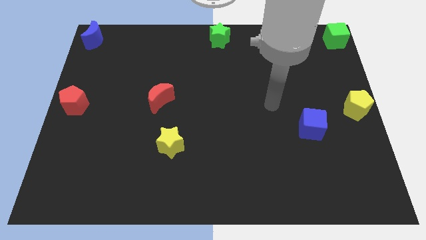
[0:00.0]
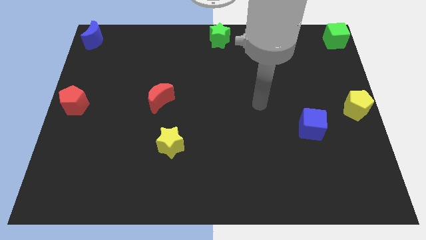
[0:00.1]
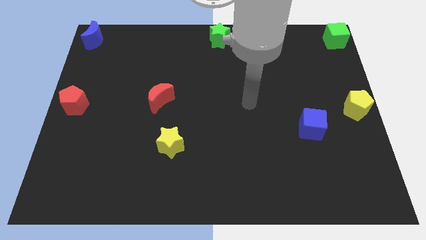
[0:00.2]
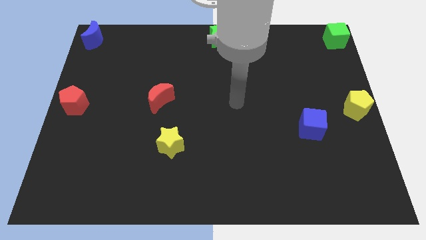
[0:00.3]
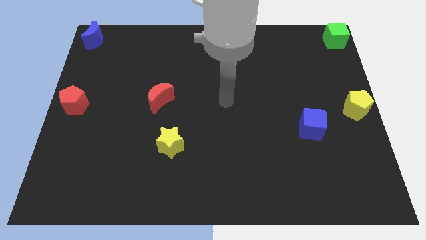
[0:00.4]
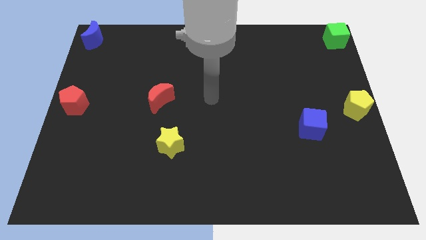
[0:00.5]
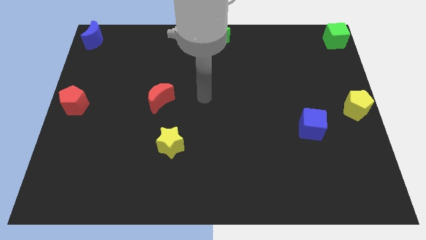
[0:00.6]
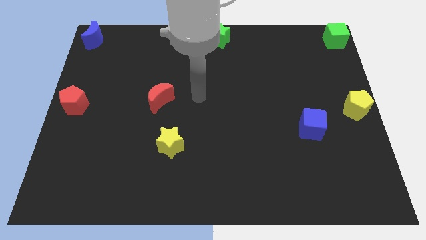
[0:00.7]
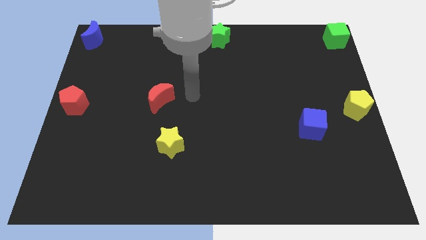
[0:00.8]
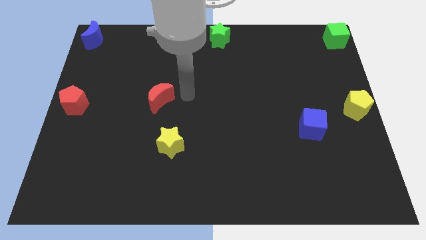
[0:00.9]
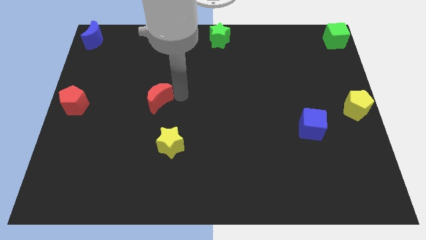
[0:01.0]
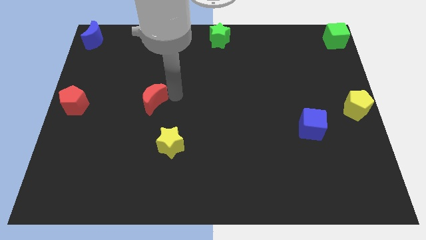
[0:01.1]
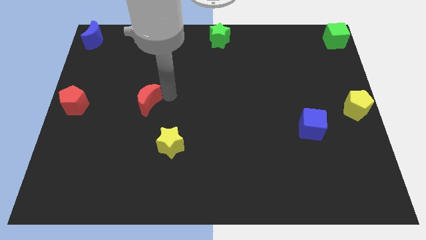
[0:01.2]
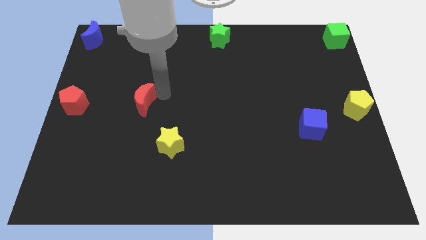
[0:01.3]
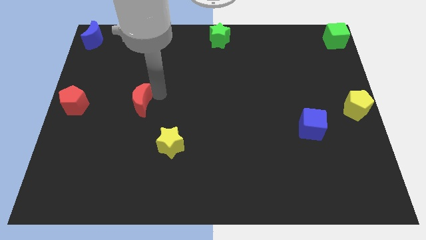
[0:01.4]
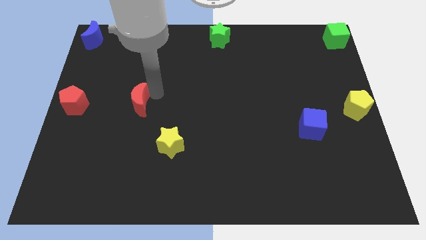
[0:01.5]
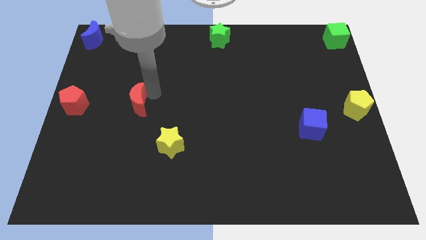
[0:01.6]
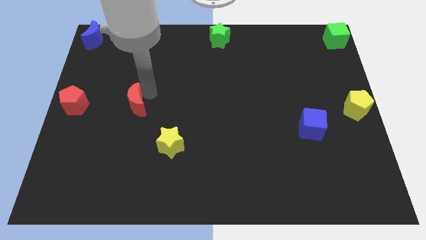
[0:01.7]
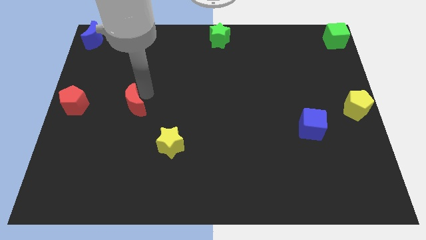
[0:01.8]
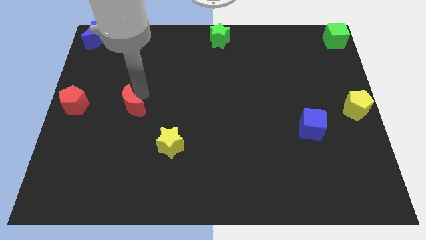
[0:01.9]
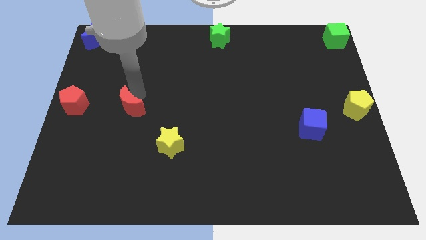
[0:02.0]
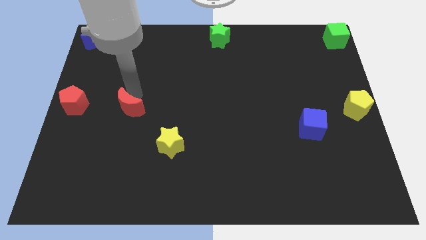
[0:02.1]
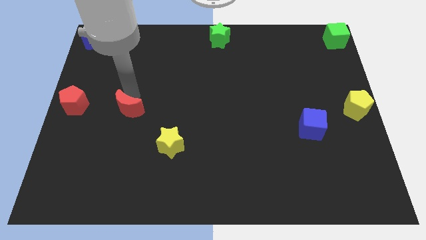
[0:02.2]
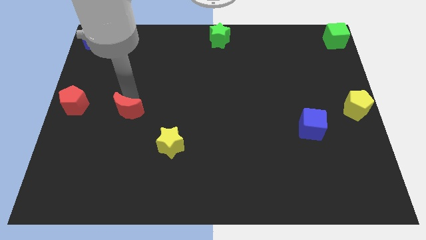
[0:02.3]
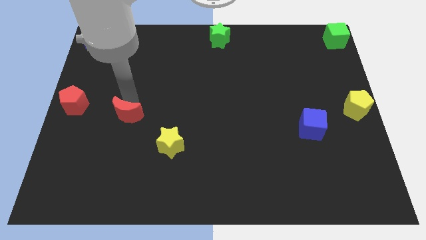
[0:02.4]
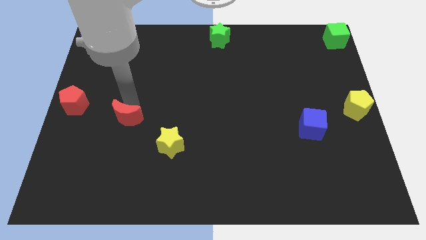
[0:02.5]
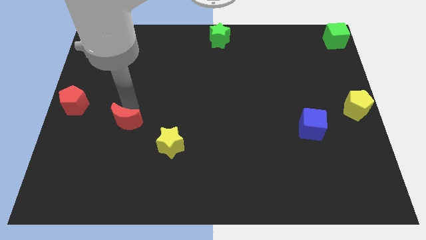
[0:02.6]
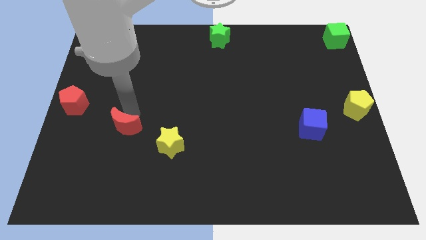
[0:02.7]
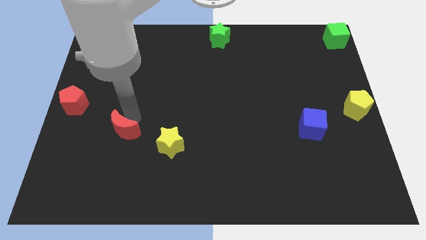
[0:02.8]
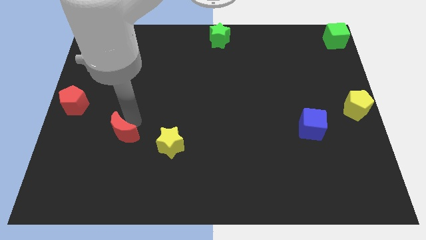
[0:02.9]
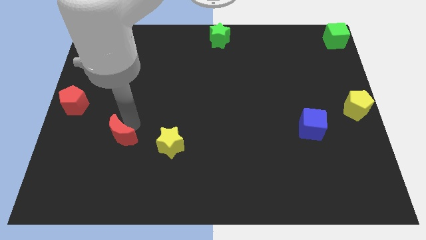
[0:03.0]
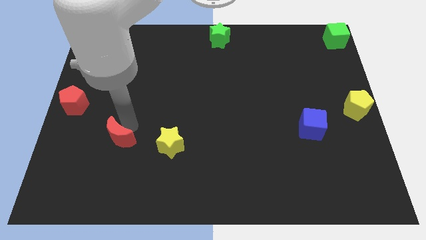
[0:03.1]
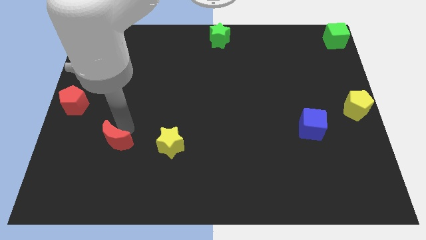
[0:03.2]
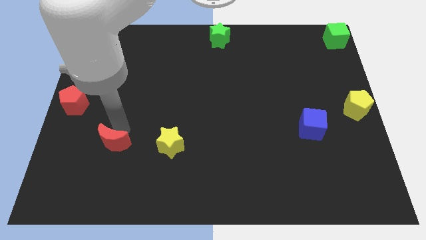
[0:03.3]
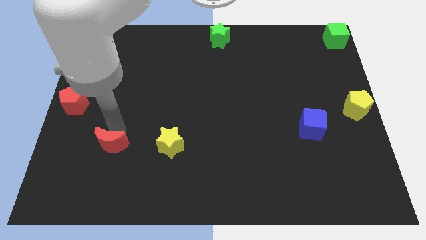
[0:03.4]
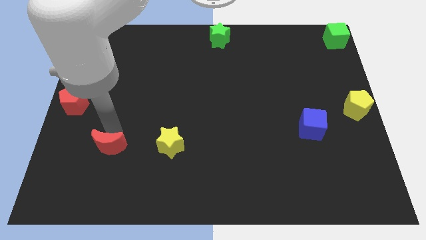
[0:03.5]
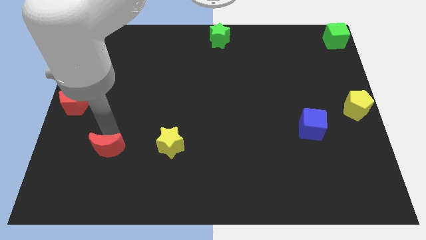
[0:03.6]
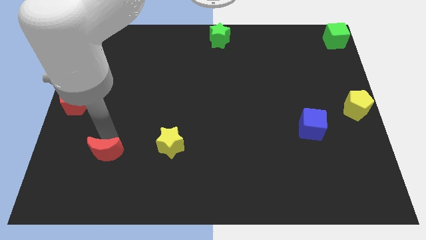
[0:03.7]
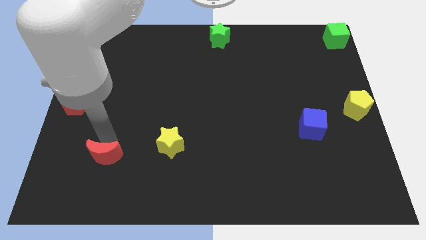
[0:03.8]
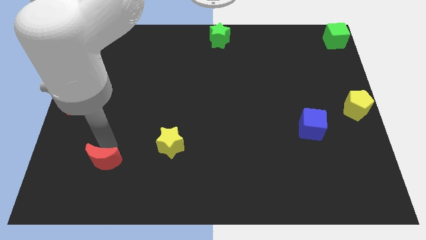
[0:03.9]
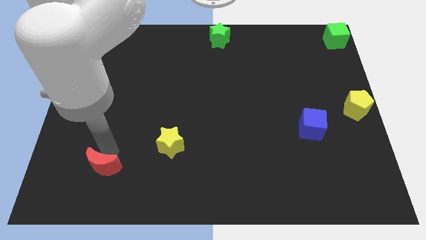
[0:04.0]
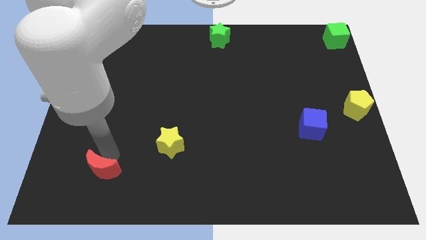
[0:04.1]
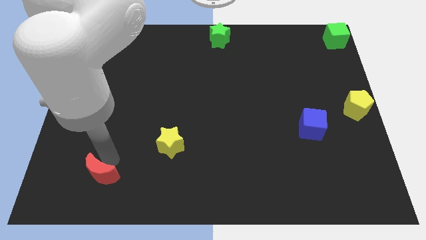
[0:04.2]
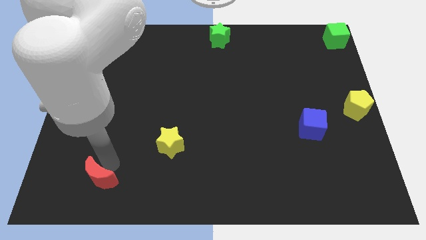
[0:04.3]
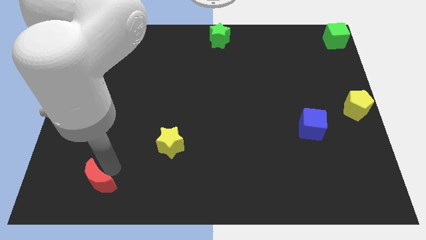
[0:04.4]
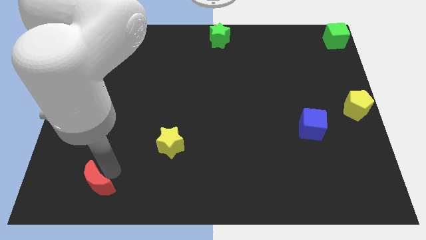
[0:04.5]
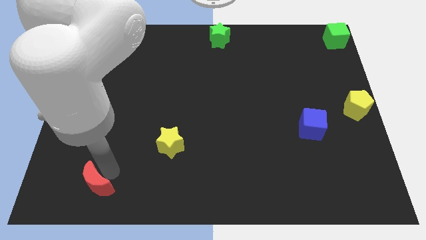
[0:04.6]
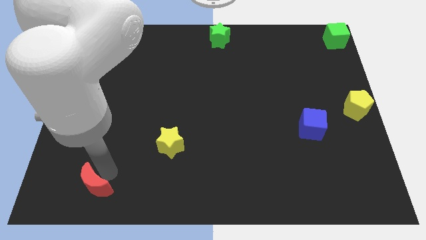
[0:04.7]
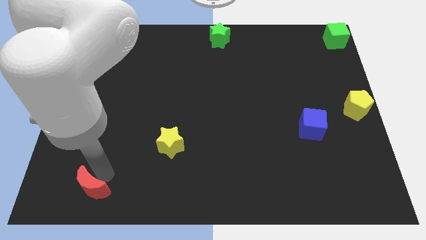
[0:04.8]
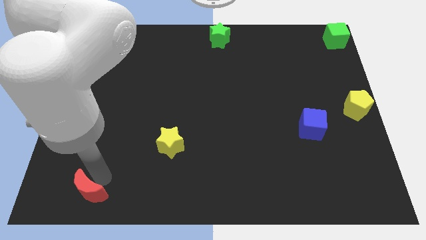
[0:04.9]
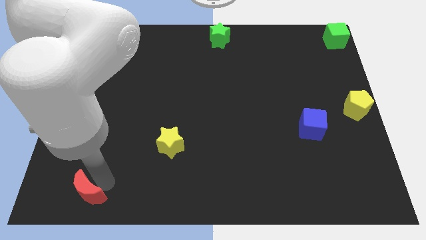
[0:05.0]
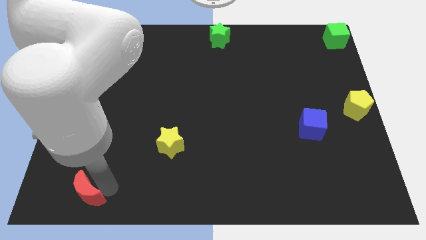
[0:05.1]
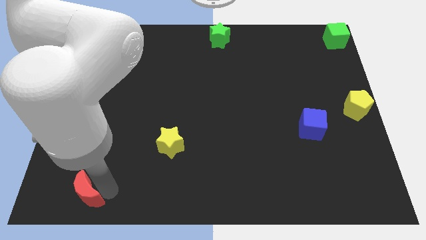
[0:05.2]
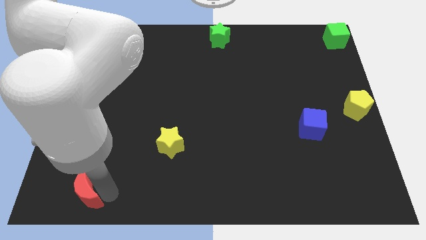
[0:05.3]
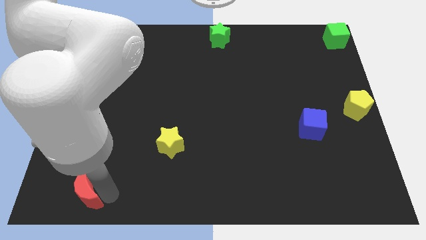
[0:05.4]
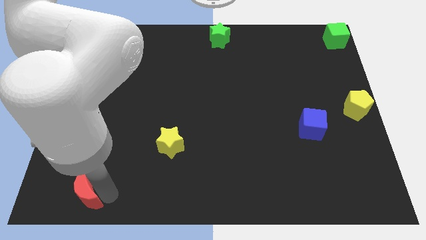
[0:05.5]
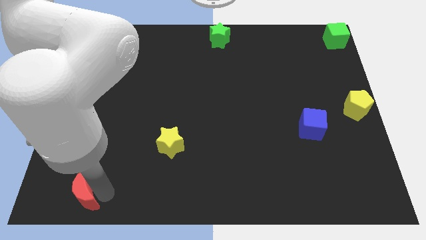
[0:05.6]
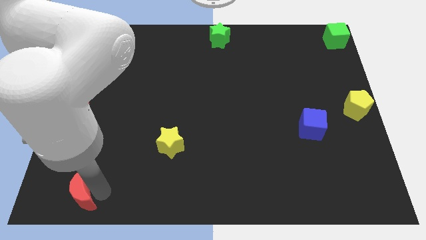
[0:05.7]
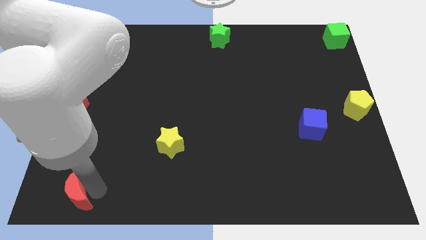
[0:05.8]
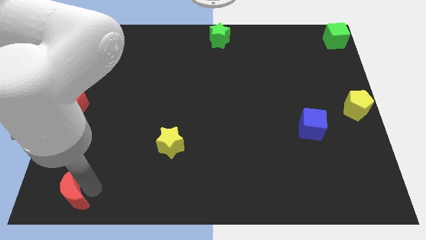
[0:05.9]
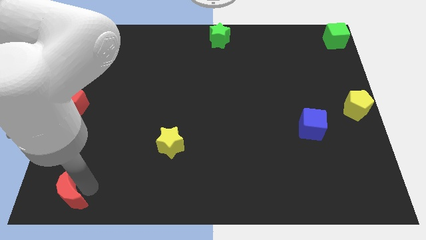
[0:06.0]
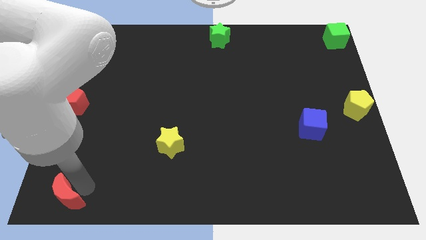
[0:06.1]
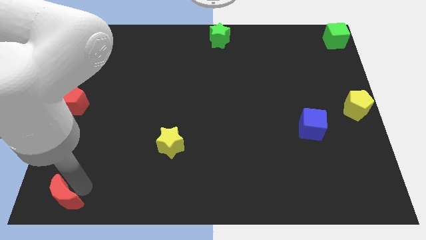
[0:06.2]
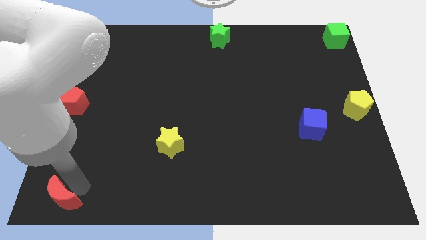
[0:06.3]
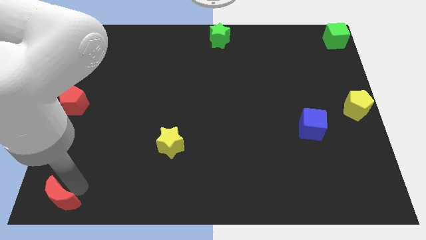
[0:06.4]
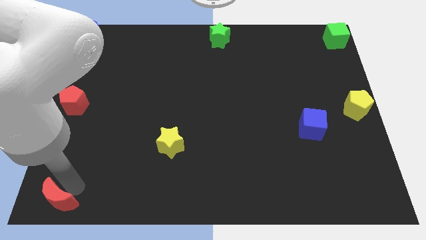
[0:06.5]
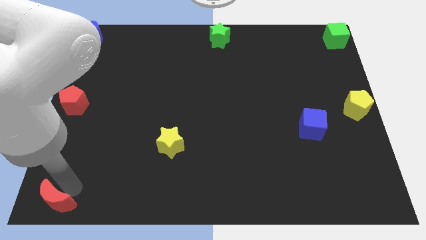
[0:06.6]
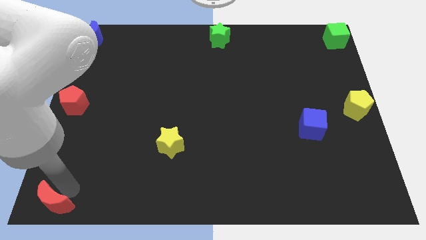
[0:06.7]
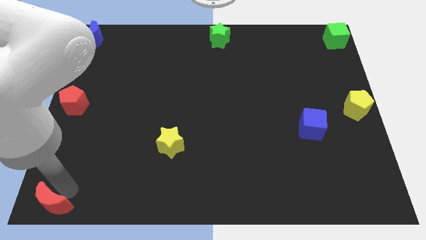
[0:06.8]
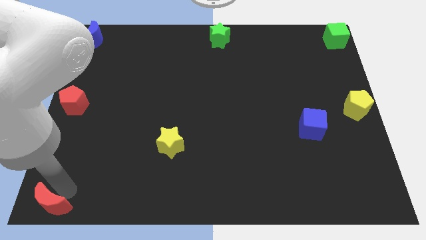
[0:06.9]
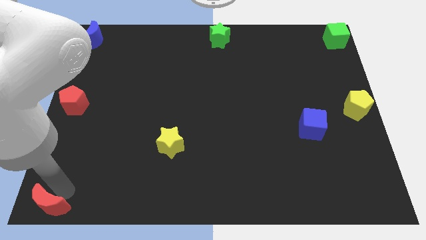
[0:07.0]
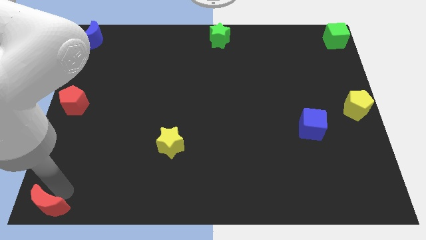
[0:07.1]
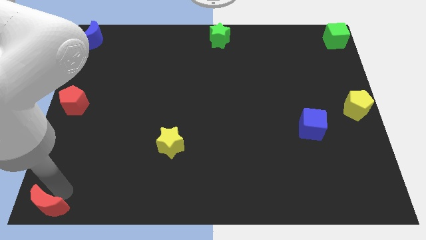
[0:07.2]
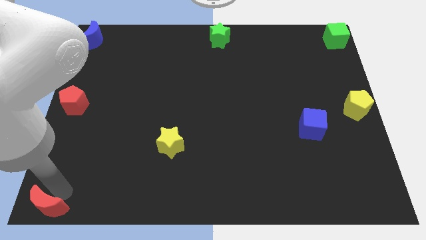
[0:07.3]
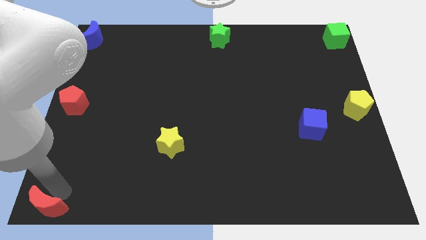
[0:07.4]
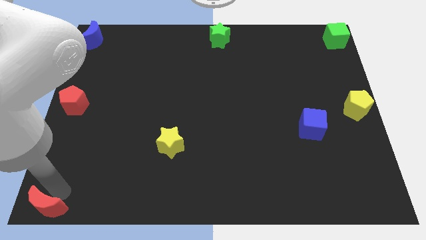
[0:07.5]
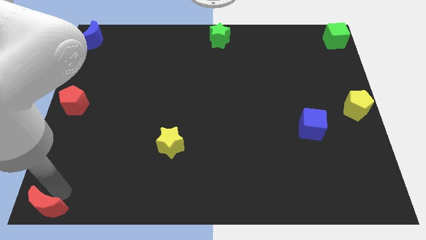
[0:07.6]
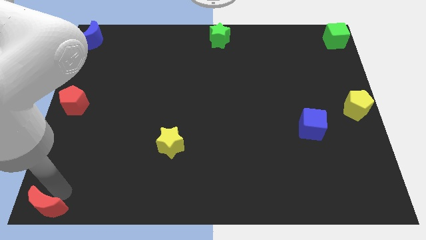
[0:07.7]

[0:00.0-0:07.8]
push red moon to the bottom left

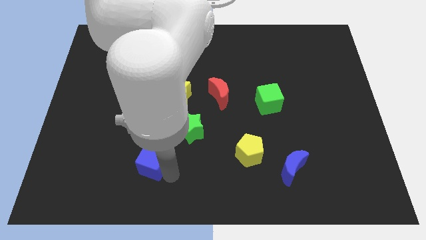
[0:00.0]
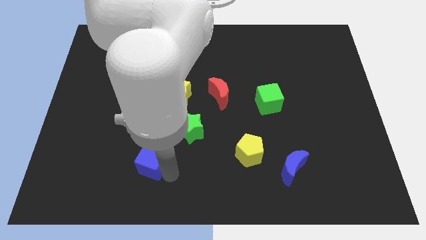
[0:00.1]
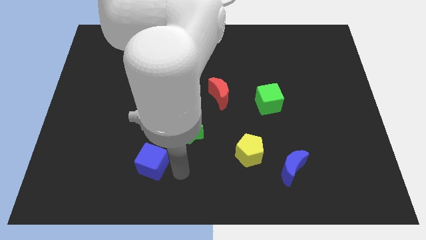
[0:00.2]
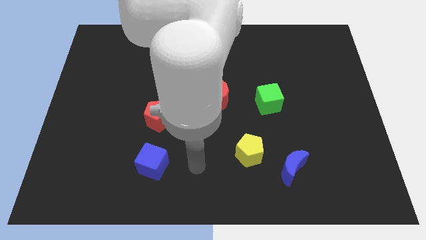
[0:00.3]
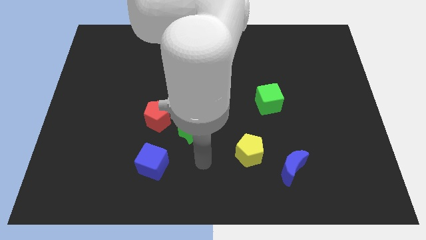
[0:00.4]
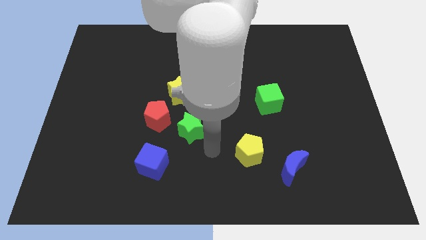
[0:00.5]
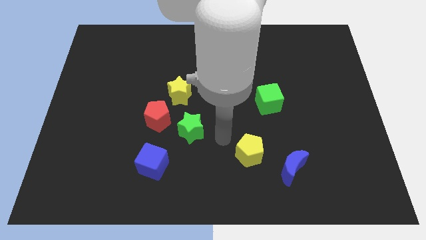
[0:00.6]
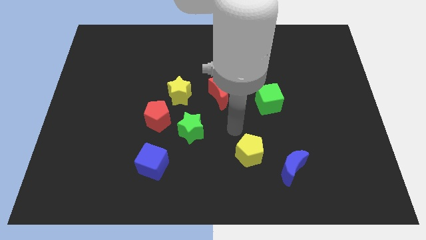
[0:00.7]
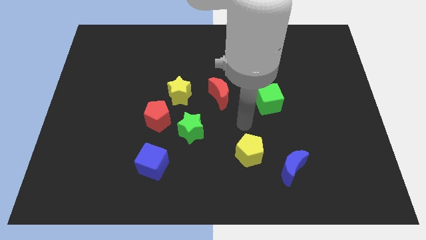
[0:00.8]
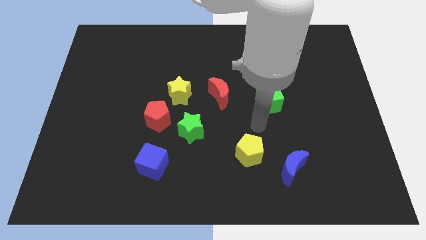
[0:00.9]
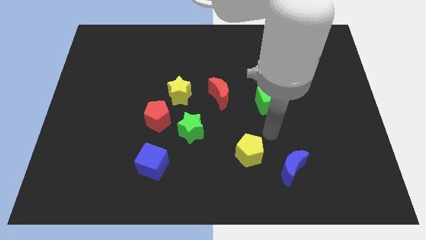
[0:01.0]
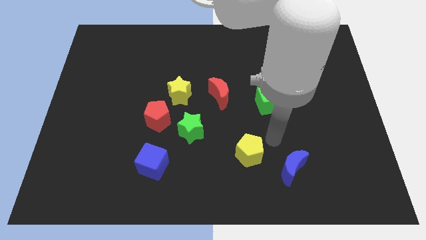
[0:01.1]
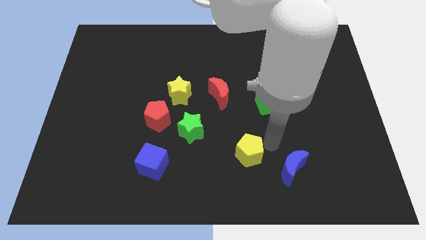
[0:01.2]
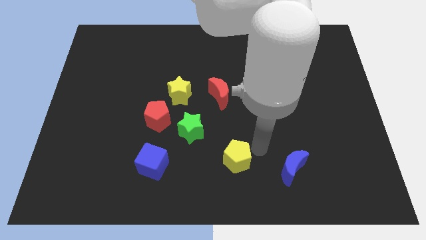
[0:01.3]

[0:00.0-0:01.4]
place your arm to the right of the yellow pentagon
